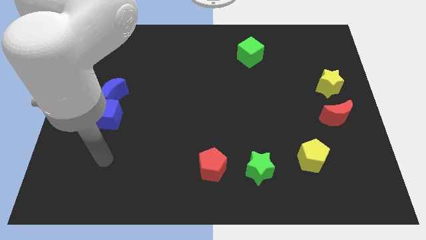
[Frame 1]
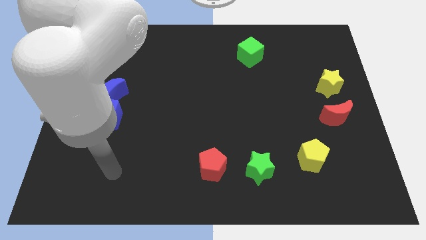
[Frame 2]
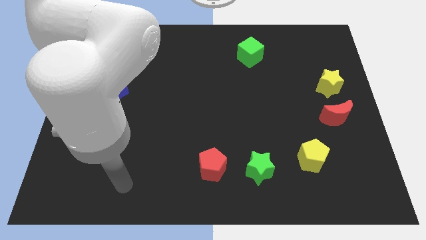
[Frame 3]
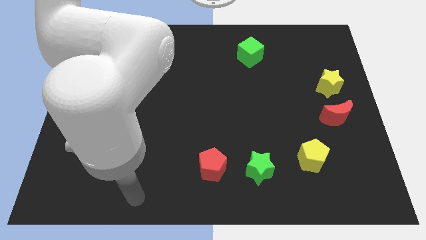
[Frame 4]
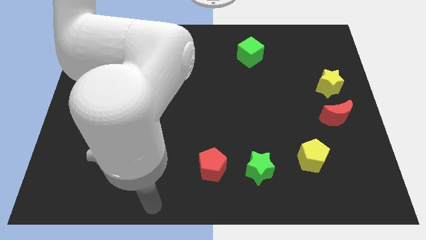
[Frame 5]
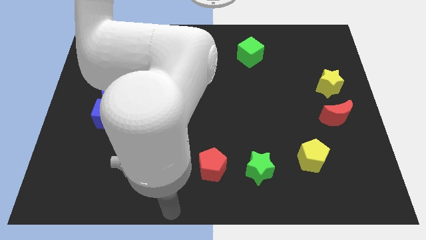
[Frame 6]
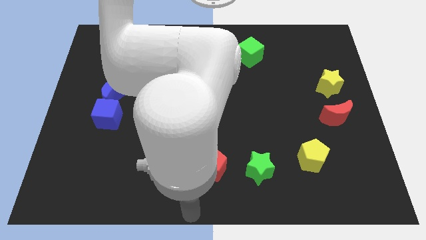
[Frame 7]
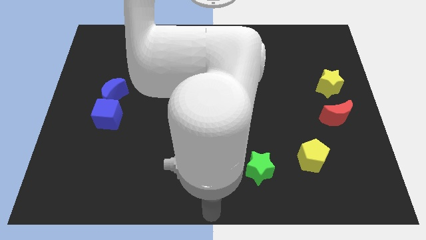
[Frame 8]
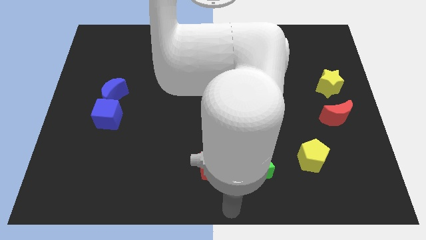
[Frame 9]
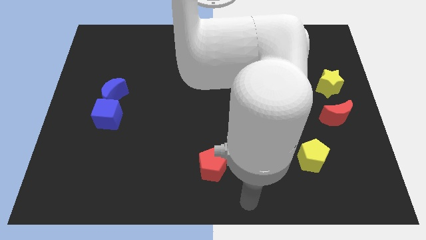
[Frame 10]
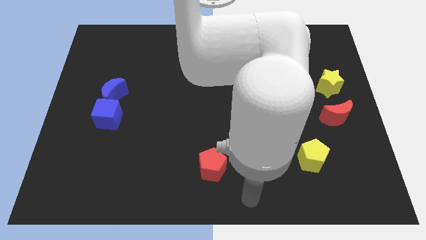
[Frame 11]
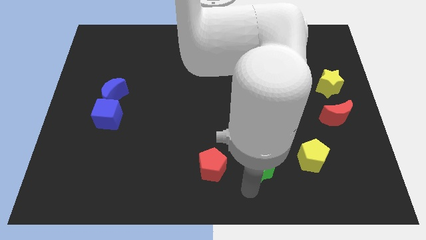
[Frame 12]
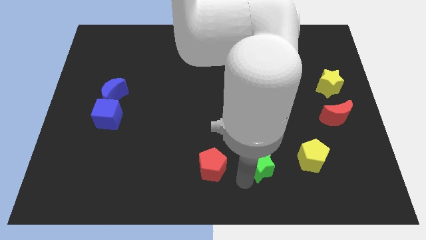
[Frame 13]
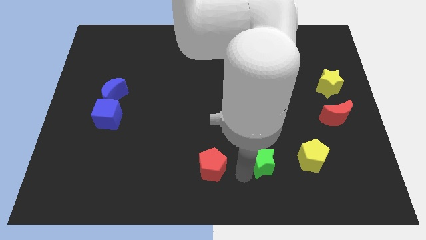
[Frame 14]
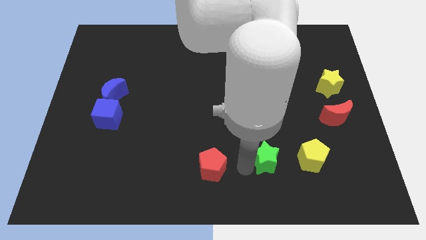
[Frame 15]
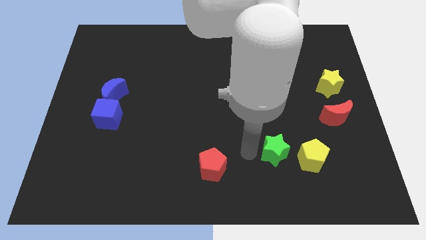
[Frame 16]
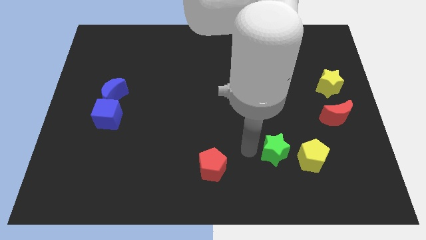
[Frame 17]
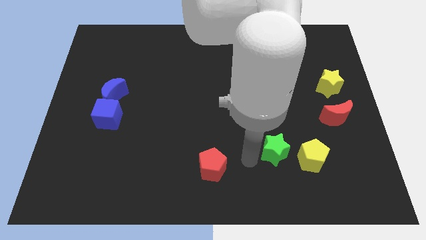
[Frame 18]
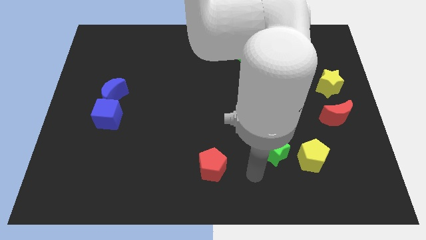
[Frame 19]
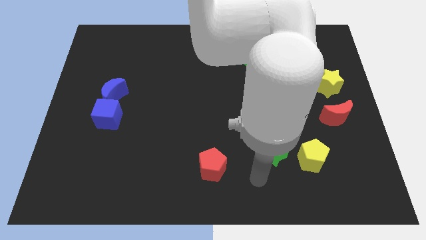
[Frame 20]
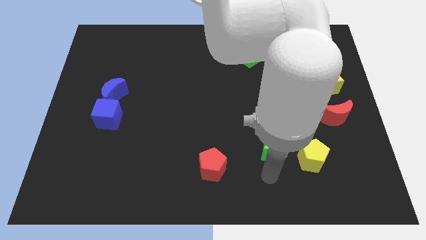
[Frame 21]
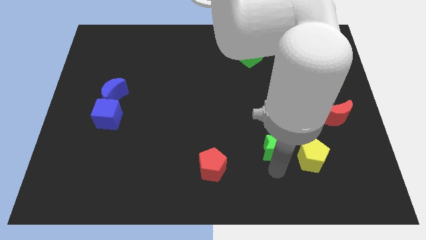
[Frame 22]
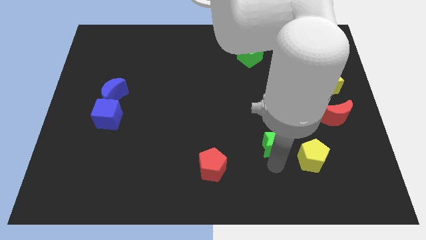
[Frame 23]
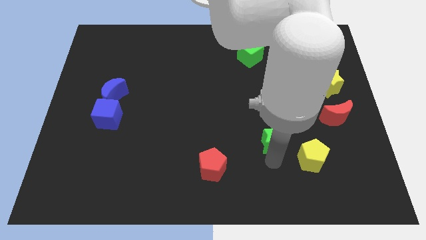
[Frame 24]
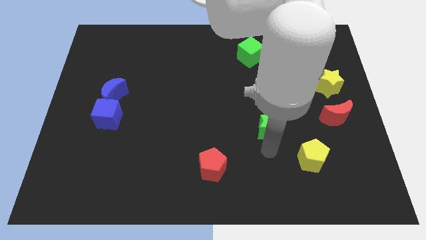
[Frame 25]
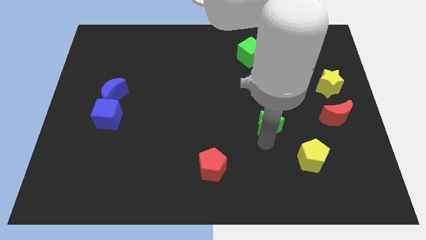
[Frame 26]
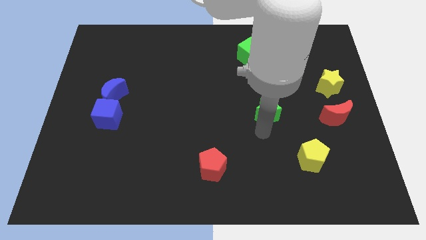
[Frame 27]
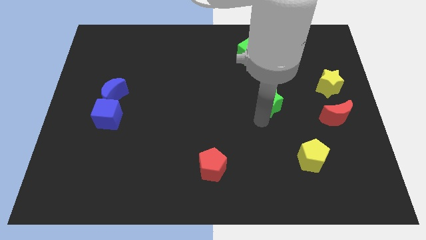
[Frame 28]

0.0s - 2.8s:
push the green star to the left of the red crescent

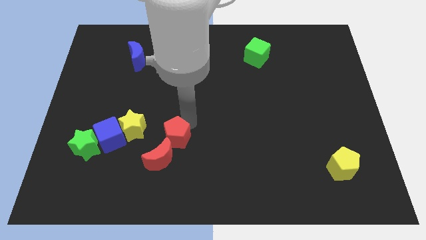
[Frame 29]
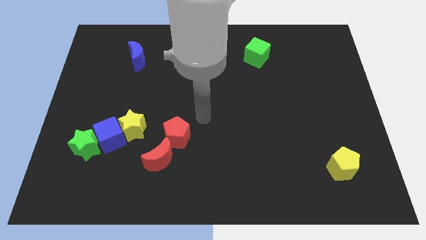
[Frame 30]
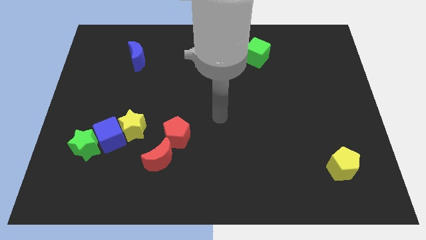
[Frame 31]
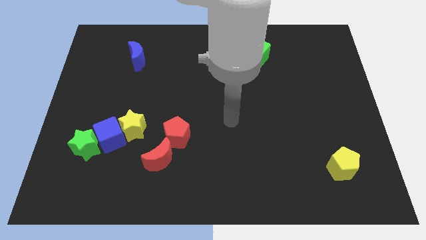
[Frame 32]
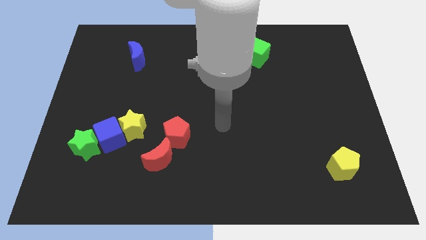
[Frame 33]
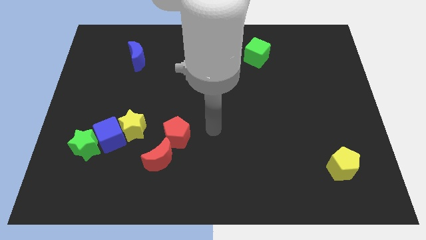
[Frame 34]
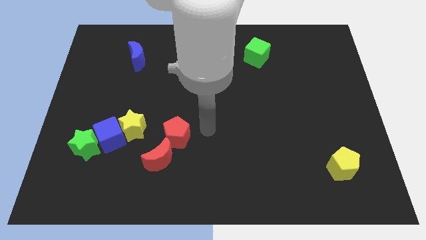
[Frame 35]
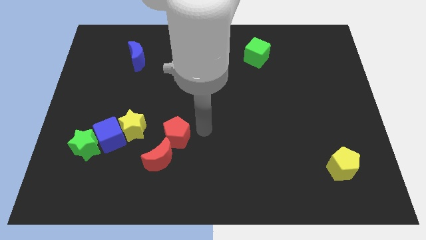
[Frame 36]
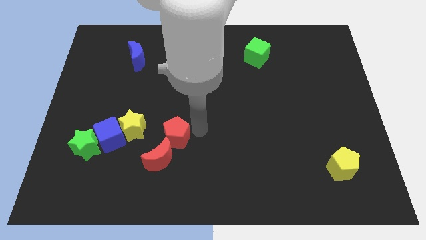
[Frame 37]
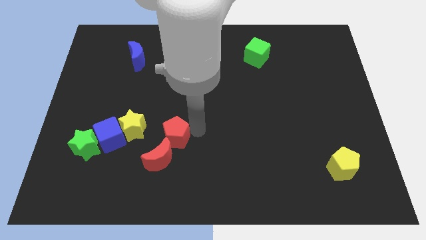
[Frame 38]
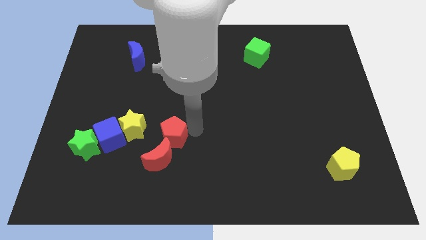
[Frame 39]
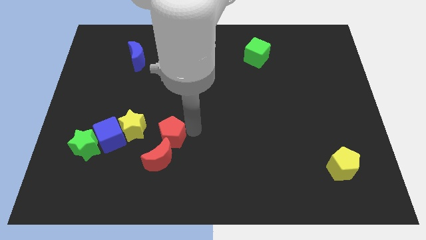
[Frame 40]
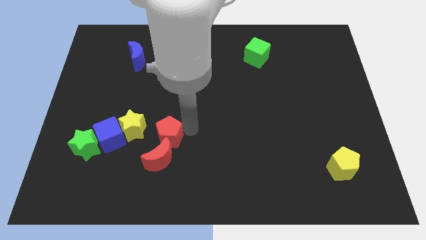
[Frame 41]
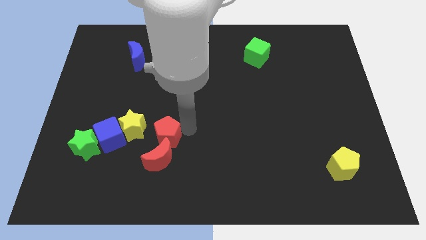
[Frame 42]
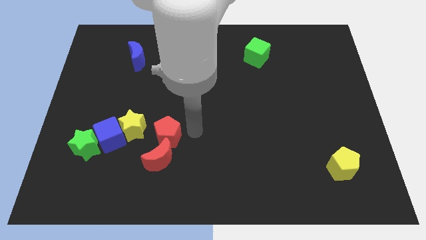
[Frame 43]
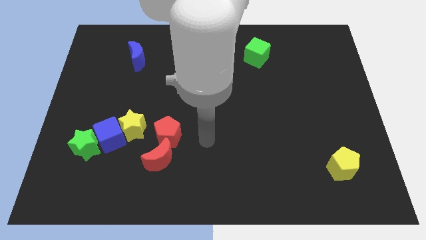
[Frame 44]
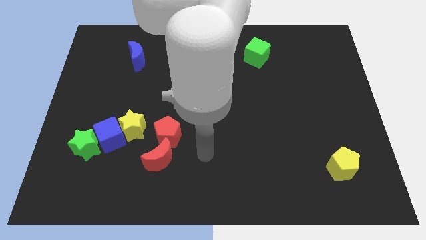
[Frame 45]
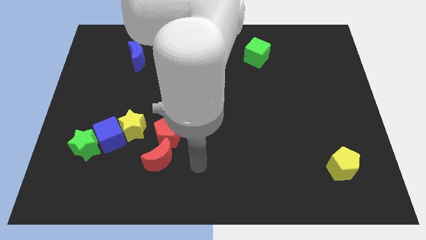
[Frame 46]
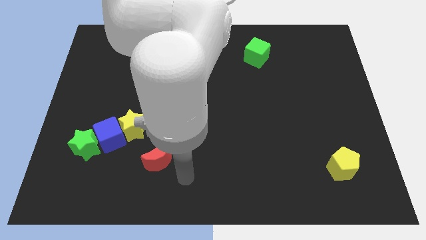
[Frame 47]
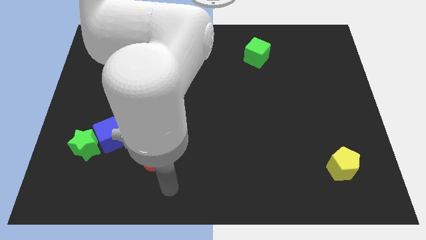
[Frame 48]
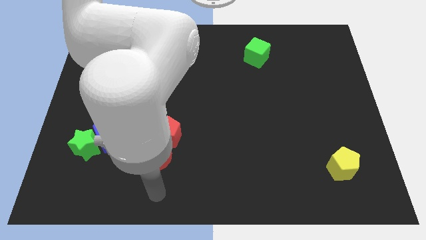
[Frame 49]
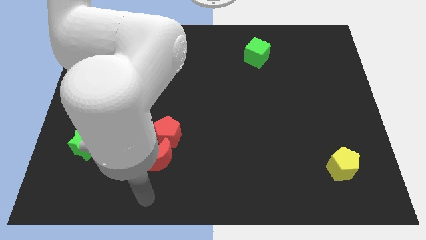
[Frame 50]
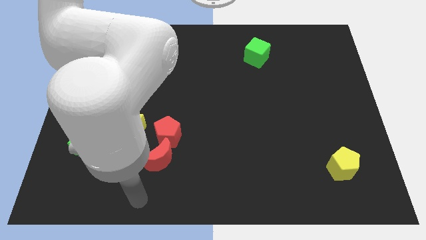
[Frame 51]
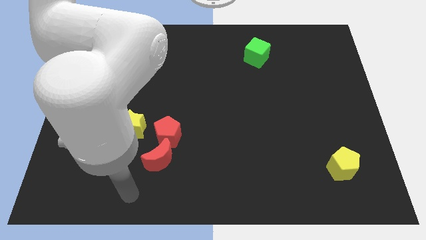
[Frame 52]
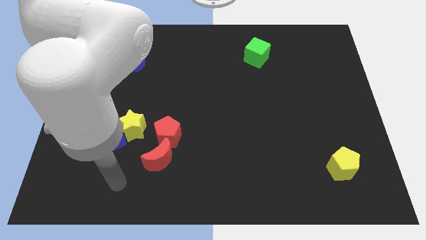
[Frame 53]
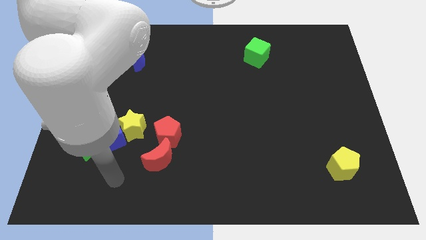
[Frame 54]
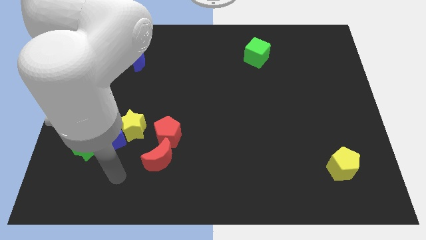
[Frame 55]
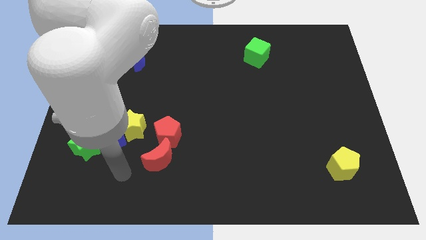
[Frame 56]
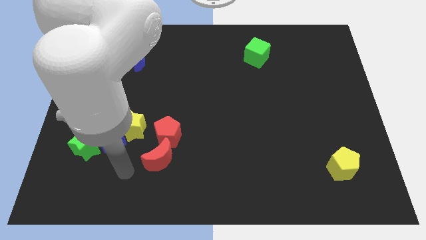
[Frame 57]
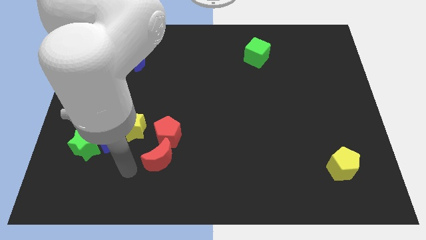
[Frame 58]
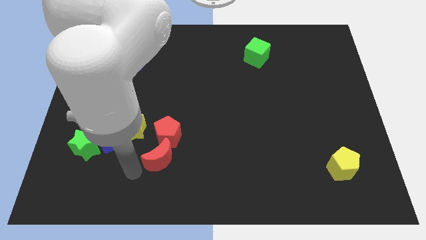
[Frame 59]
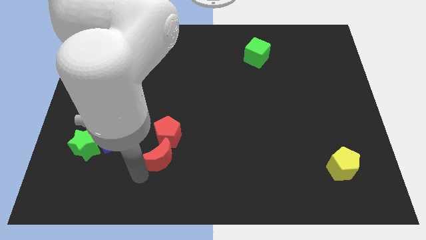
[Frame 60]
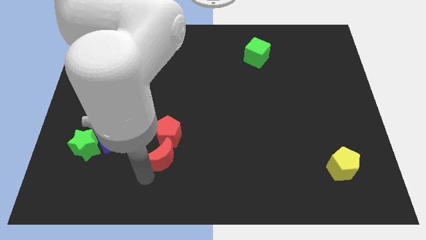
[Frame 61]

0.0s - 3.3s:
adjust the red pentagon on top of the red moon

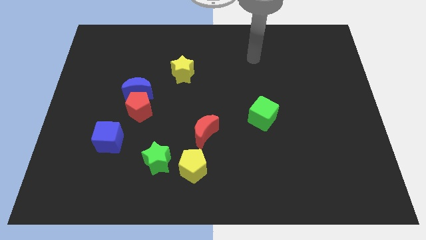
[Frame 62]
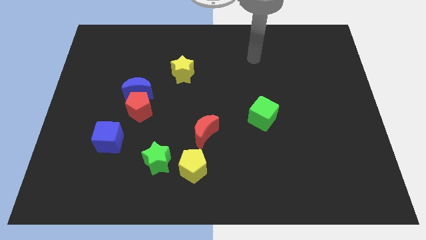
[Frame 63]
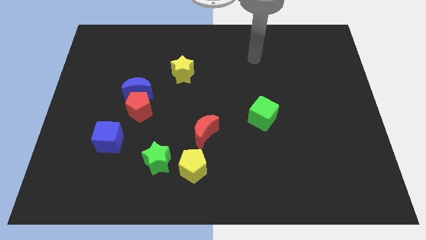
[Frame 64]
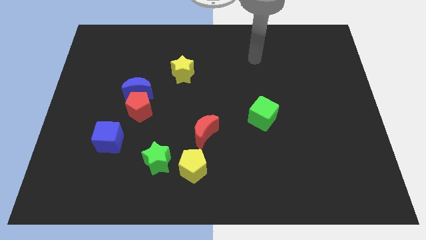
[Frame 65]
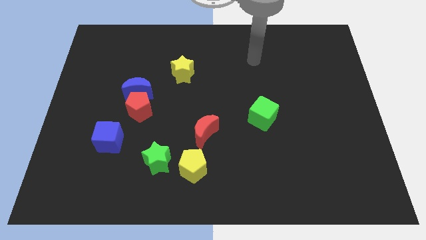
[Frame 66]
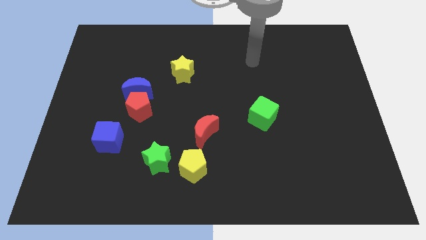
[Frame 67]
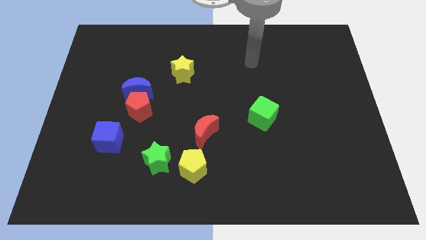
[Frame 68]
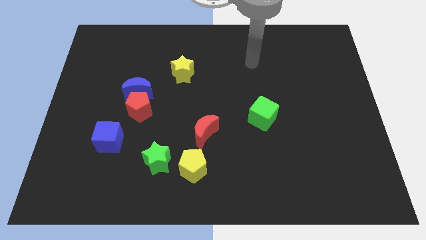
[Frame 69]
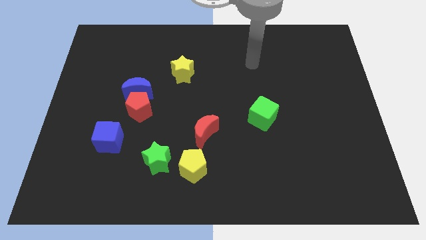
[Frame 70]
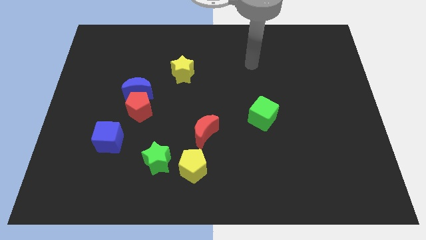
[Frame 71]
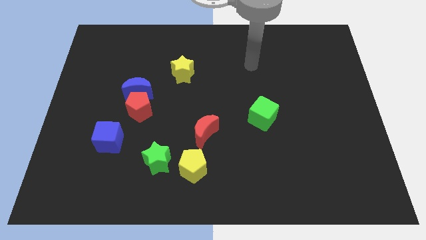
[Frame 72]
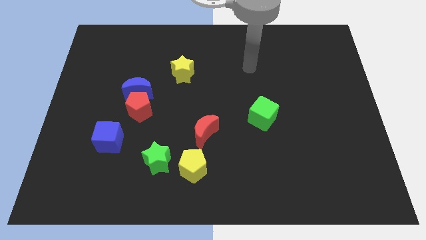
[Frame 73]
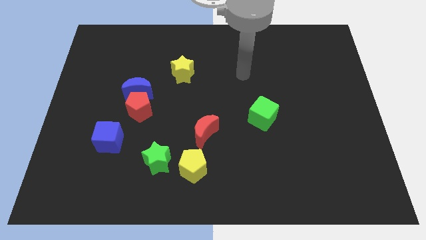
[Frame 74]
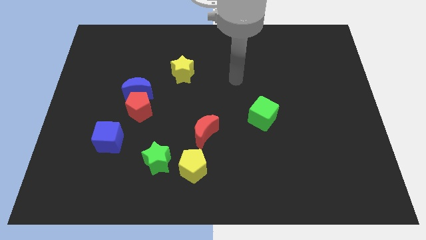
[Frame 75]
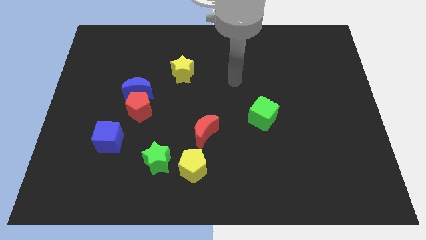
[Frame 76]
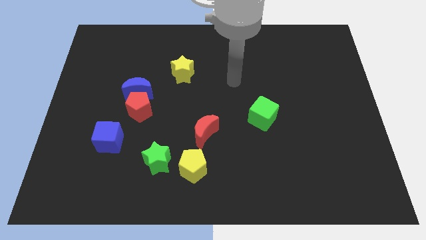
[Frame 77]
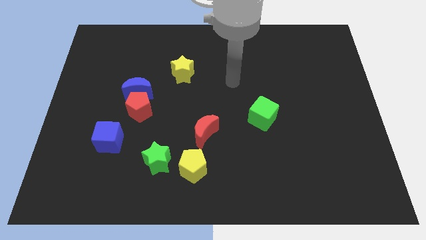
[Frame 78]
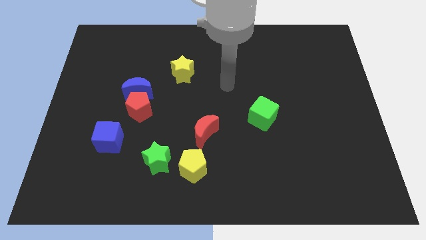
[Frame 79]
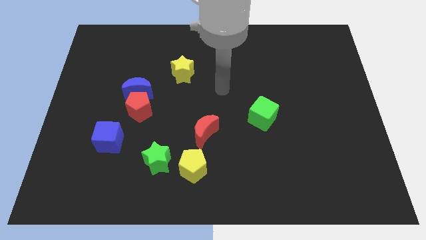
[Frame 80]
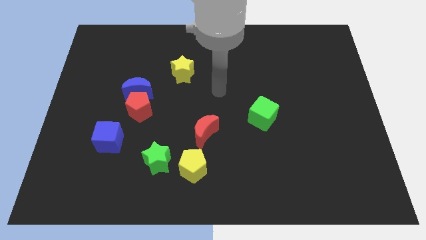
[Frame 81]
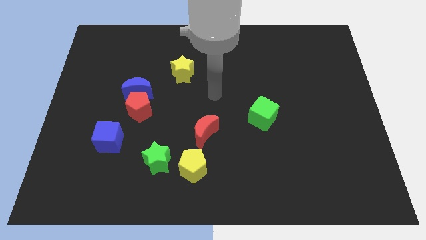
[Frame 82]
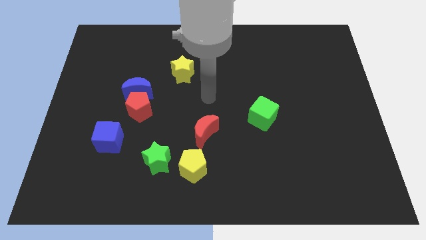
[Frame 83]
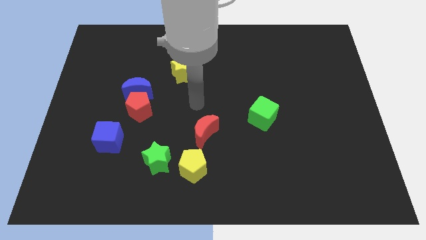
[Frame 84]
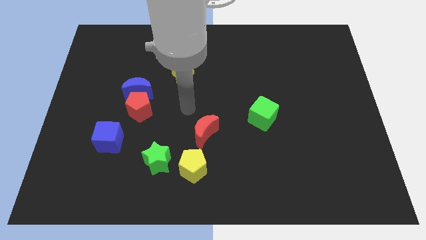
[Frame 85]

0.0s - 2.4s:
move your arm to the center

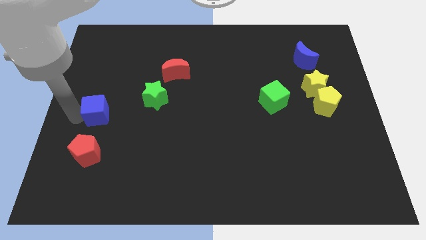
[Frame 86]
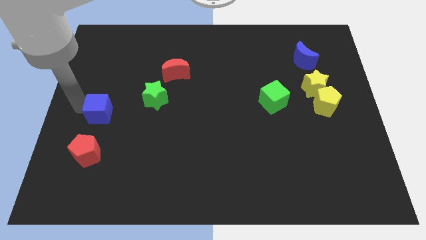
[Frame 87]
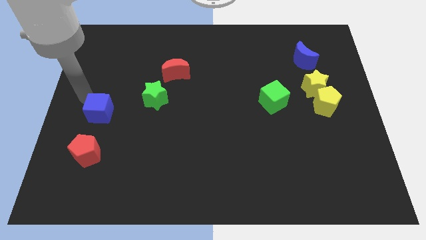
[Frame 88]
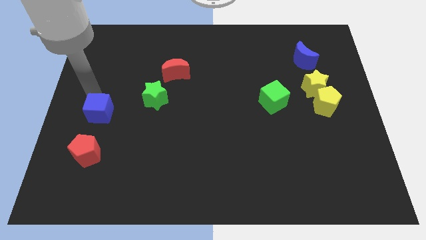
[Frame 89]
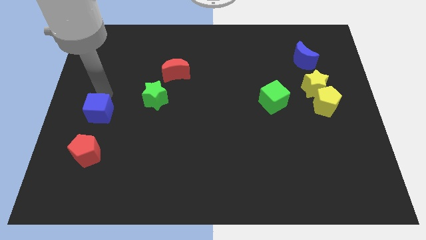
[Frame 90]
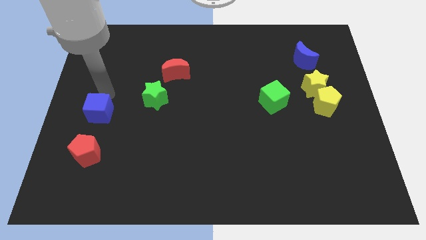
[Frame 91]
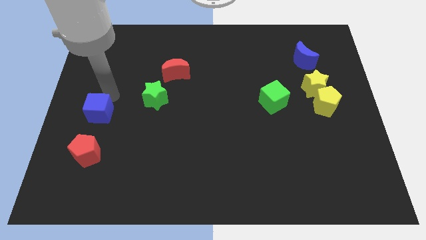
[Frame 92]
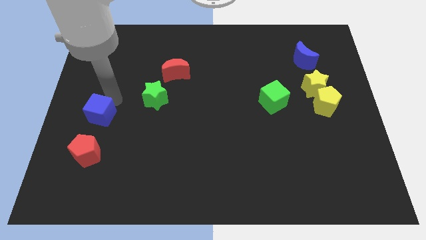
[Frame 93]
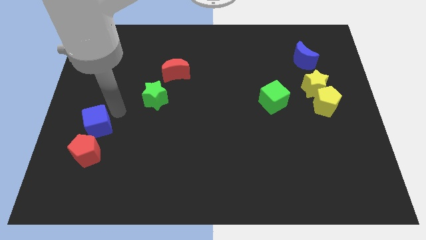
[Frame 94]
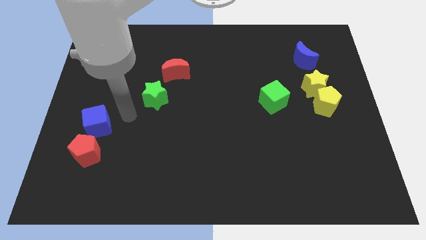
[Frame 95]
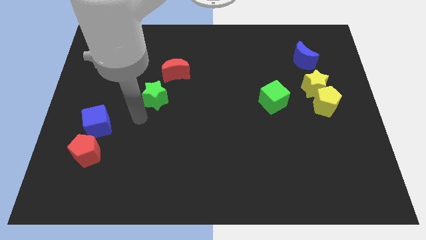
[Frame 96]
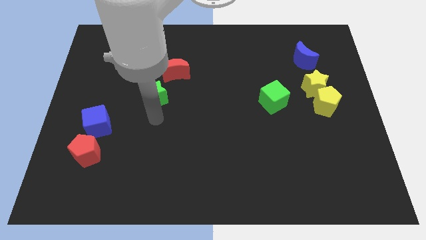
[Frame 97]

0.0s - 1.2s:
move blue cube towards red pentagon
